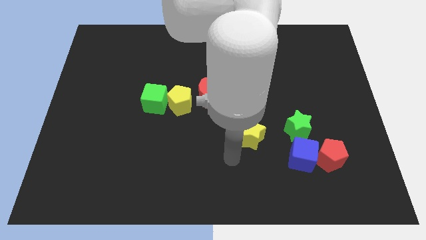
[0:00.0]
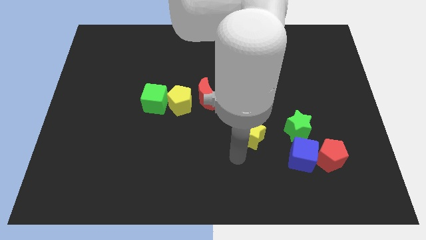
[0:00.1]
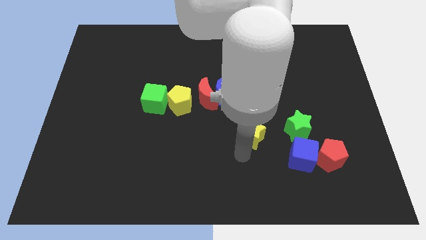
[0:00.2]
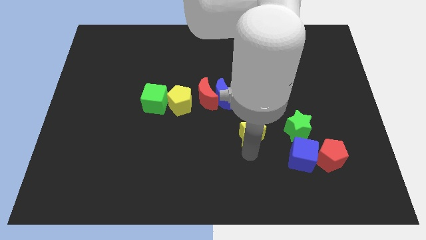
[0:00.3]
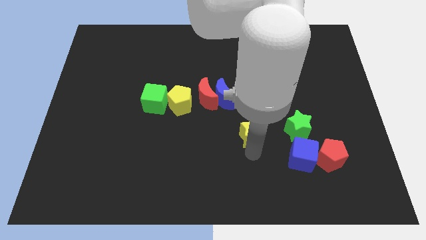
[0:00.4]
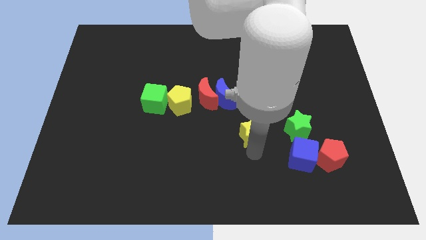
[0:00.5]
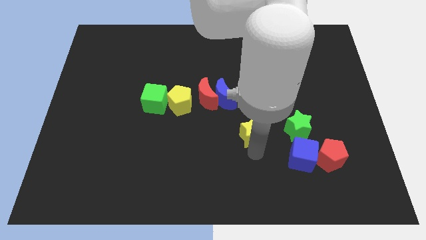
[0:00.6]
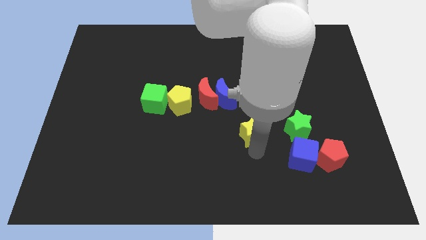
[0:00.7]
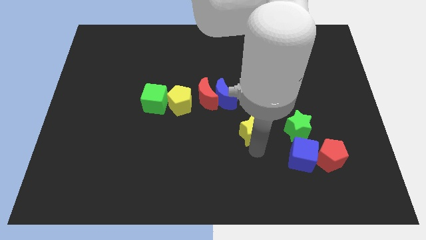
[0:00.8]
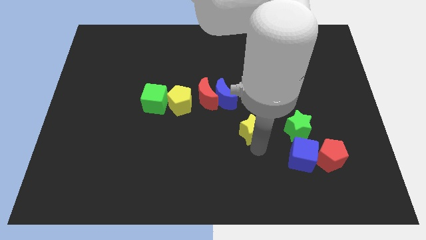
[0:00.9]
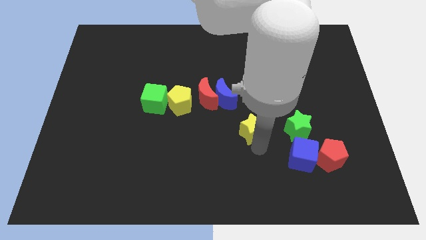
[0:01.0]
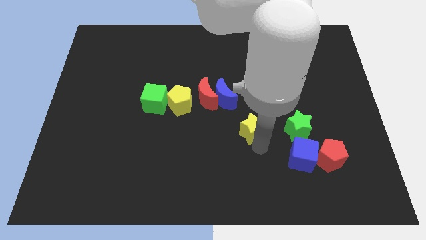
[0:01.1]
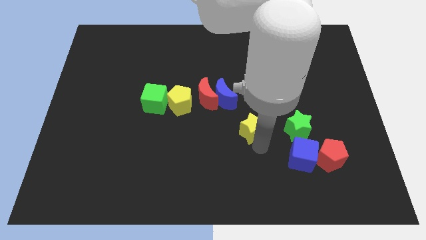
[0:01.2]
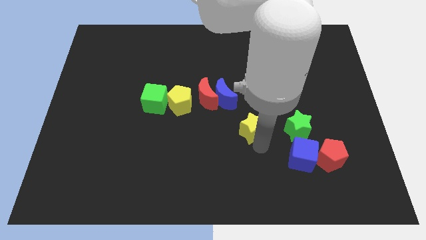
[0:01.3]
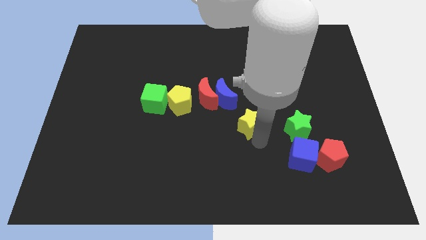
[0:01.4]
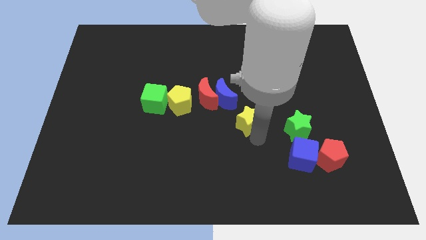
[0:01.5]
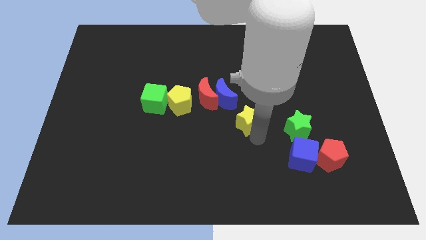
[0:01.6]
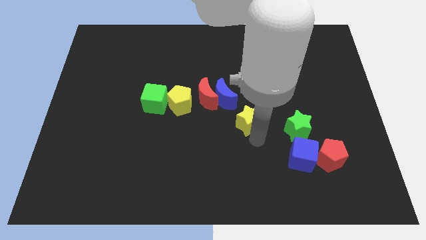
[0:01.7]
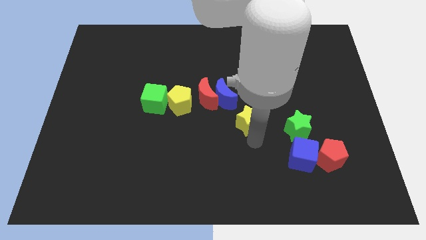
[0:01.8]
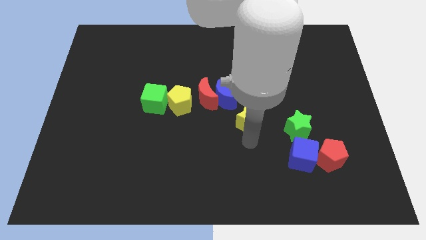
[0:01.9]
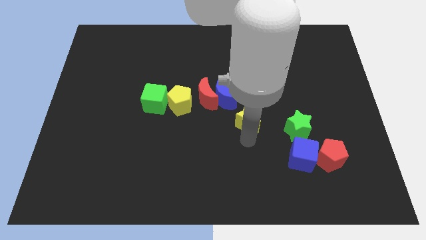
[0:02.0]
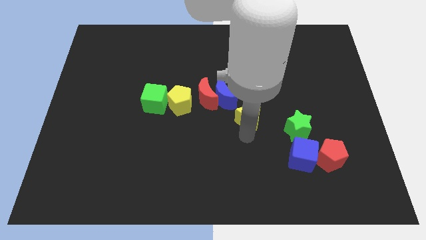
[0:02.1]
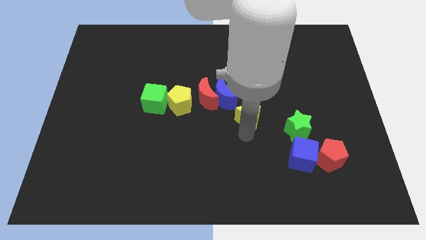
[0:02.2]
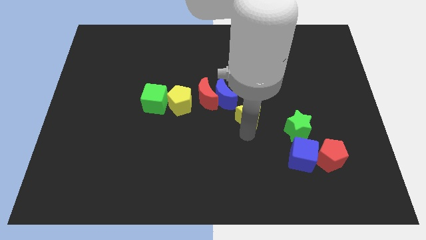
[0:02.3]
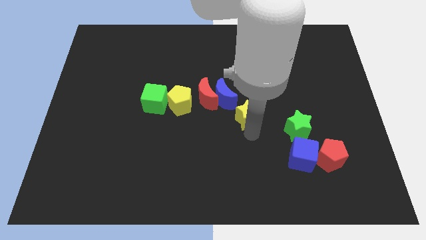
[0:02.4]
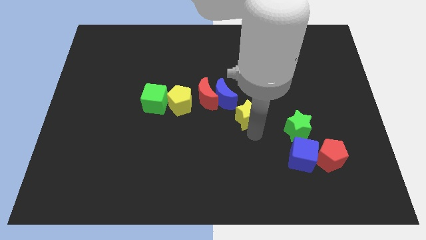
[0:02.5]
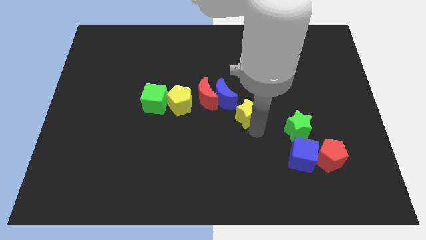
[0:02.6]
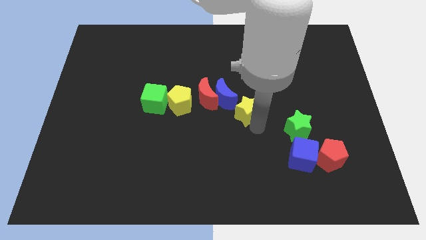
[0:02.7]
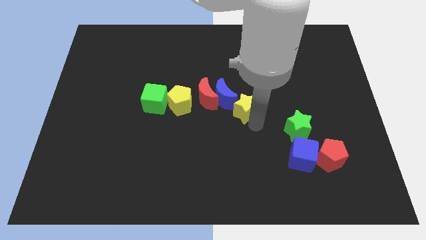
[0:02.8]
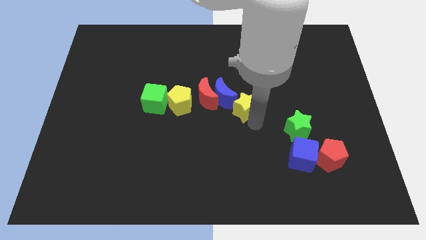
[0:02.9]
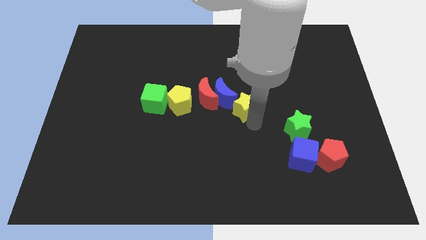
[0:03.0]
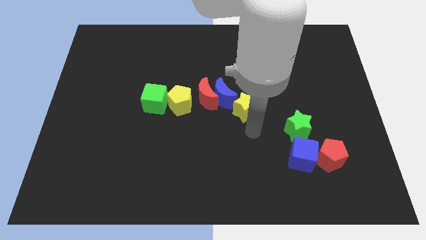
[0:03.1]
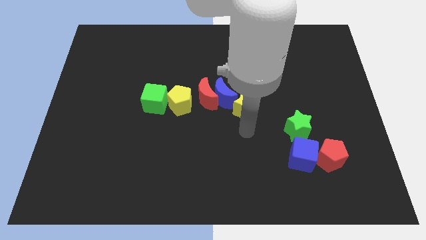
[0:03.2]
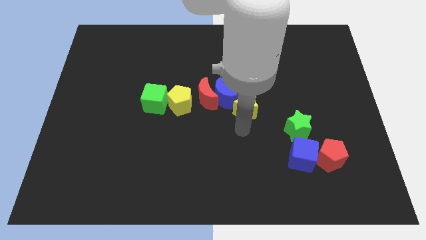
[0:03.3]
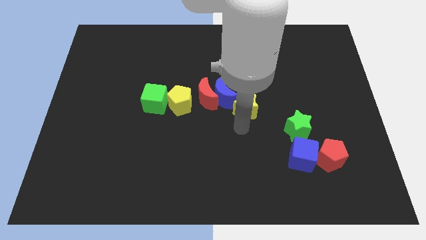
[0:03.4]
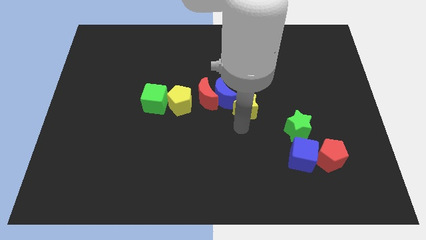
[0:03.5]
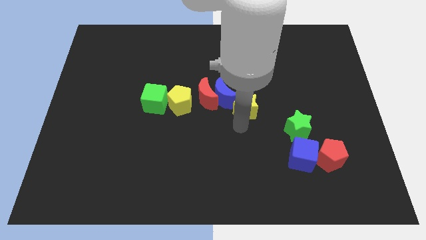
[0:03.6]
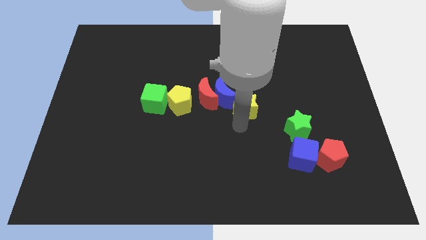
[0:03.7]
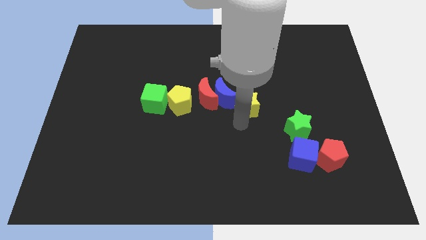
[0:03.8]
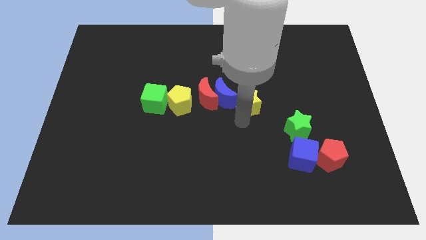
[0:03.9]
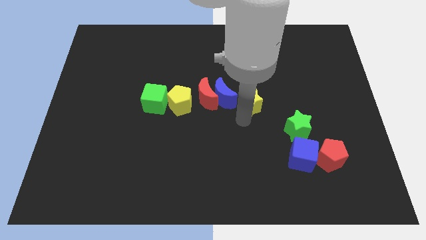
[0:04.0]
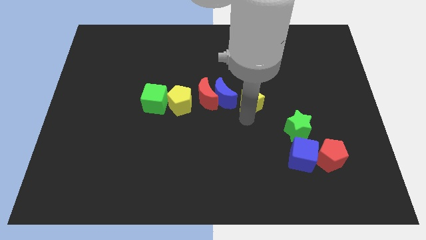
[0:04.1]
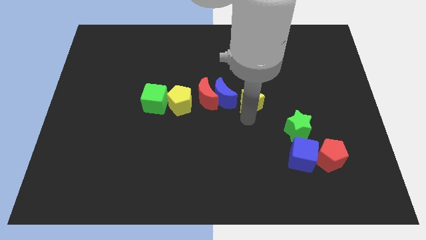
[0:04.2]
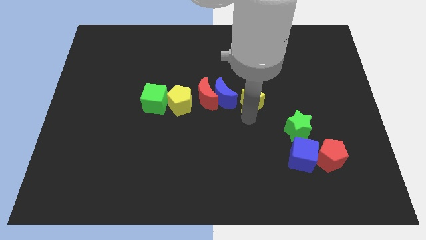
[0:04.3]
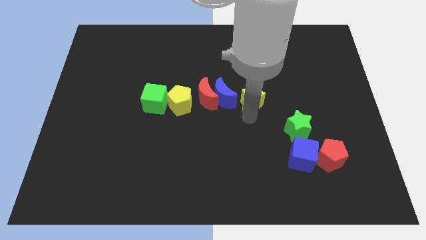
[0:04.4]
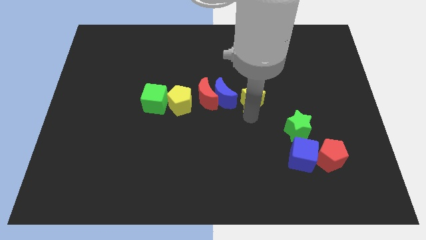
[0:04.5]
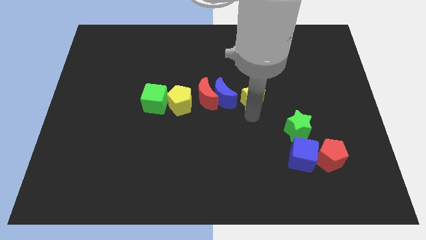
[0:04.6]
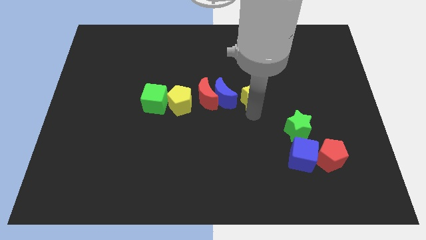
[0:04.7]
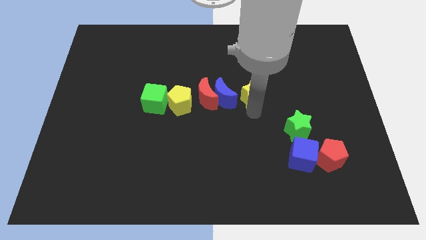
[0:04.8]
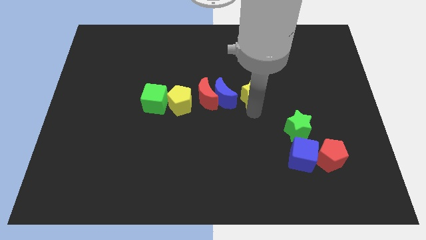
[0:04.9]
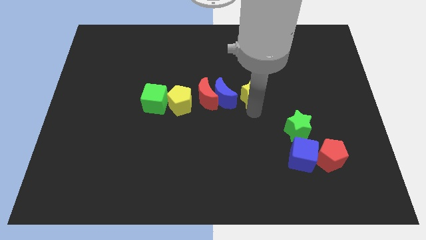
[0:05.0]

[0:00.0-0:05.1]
place yellow star to the right of blue moon

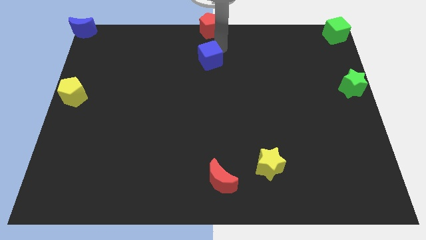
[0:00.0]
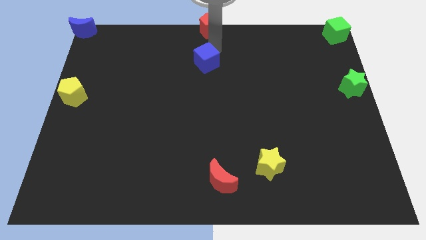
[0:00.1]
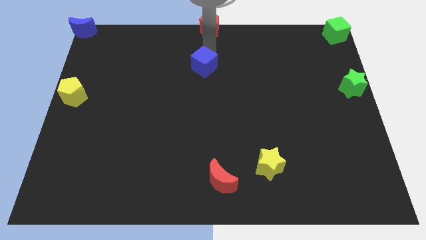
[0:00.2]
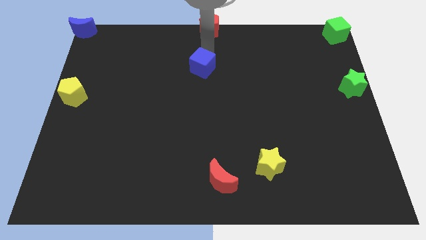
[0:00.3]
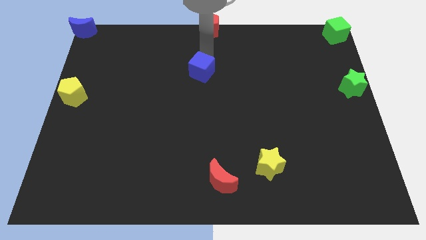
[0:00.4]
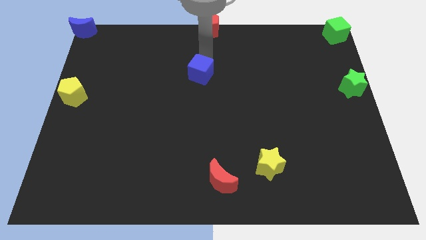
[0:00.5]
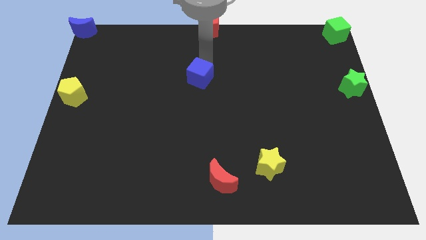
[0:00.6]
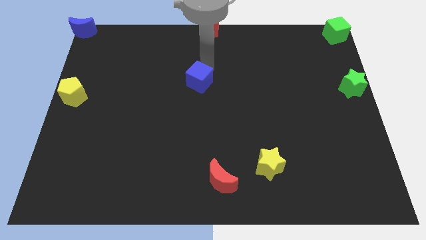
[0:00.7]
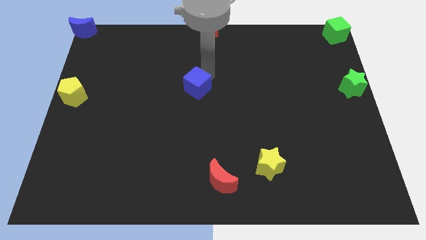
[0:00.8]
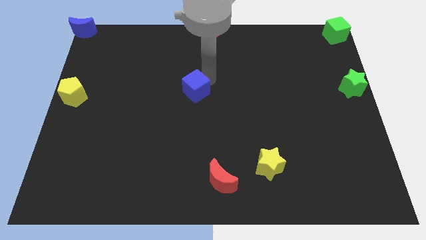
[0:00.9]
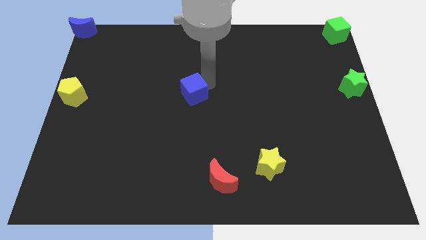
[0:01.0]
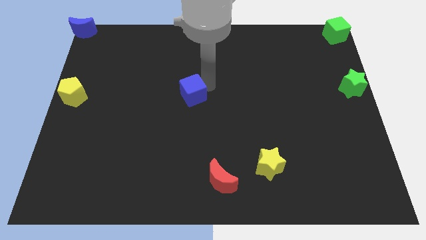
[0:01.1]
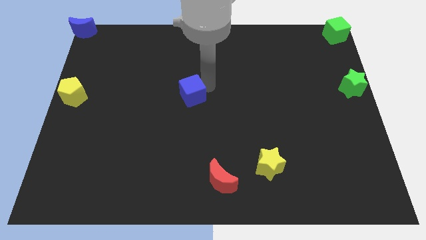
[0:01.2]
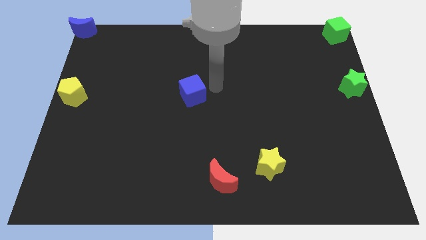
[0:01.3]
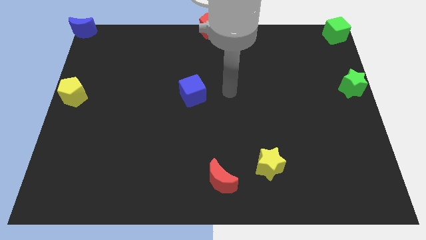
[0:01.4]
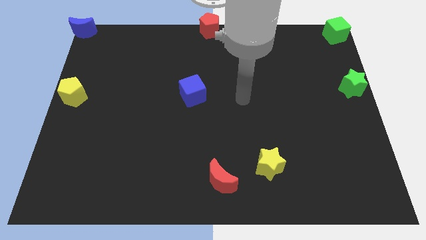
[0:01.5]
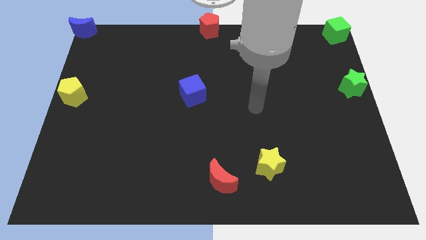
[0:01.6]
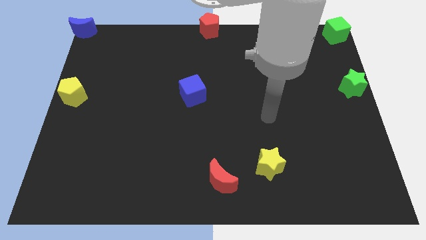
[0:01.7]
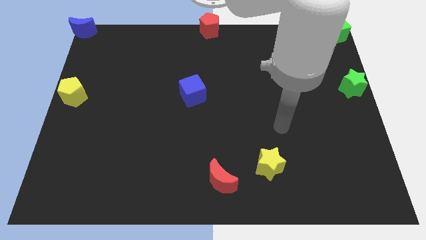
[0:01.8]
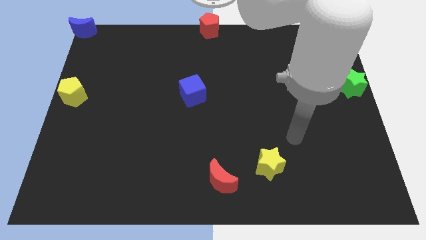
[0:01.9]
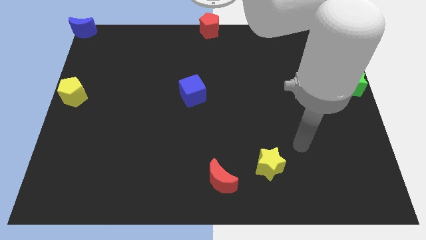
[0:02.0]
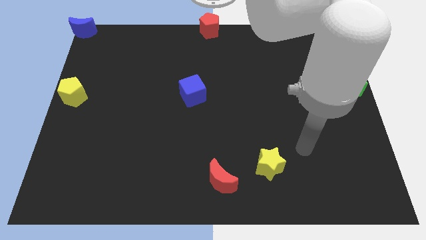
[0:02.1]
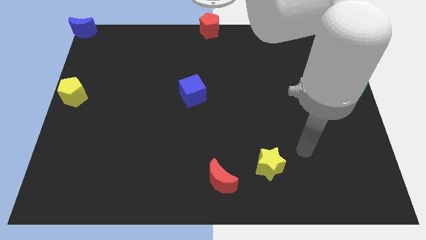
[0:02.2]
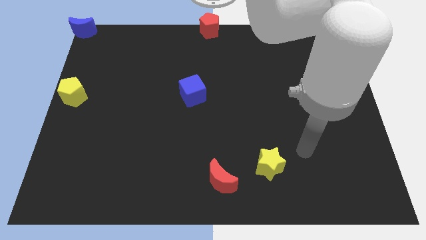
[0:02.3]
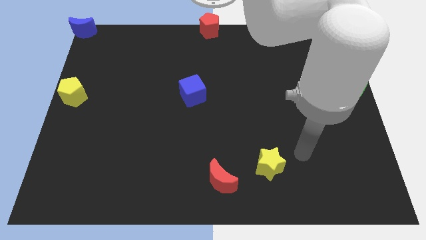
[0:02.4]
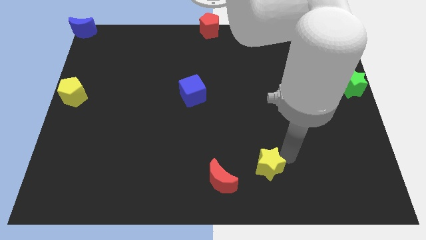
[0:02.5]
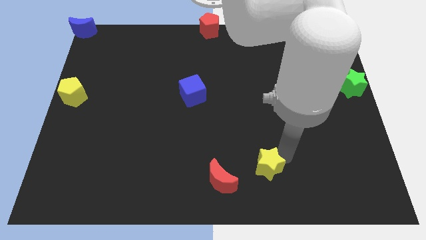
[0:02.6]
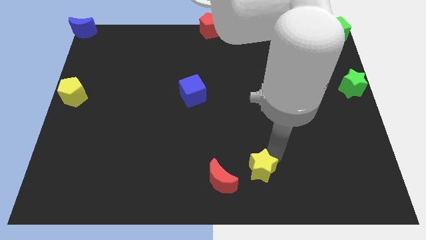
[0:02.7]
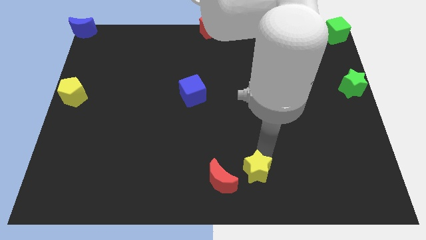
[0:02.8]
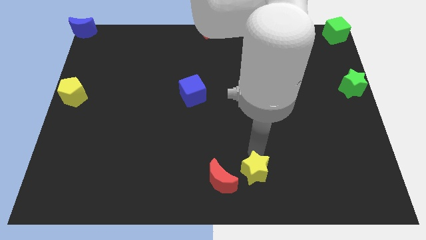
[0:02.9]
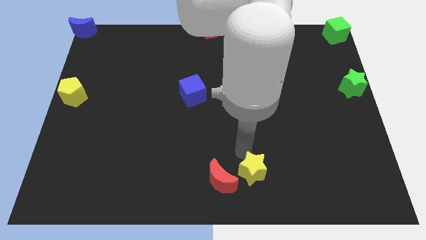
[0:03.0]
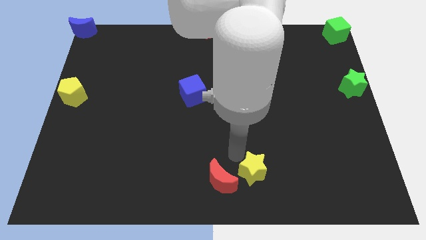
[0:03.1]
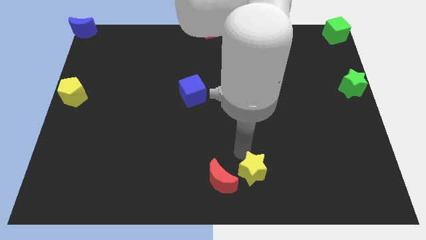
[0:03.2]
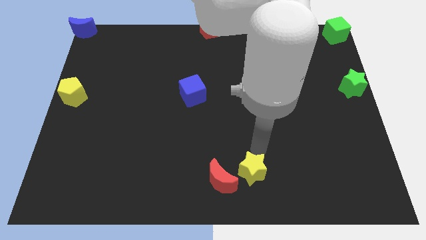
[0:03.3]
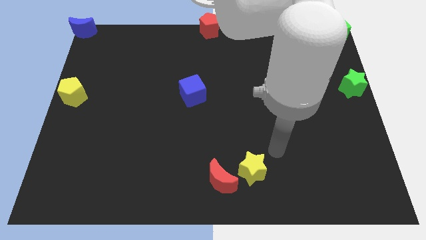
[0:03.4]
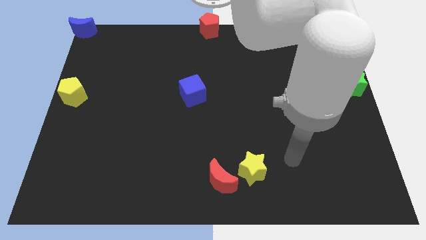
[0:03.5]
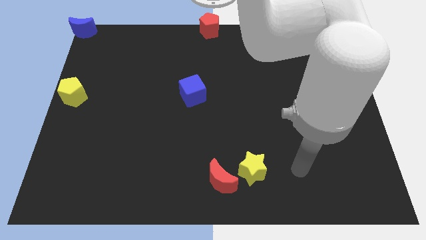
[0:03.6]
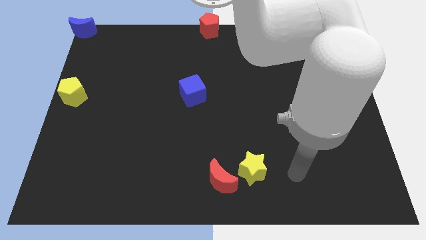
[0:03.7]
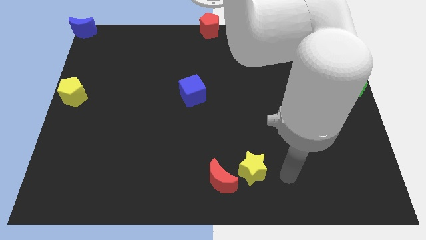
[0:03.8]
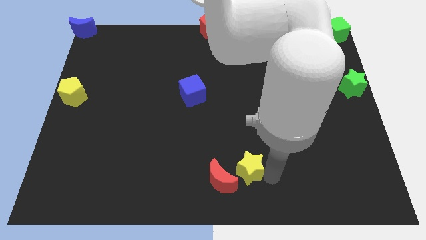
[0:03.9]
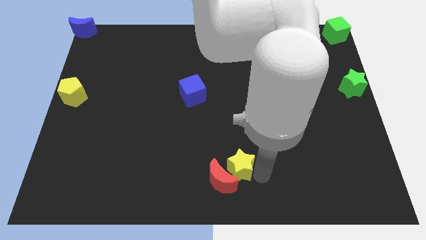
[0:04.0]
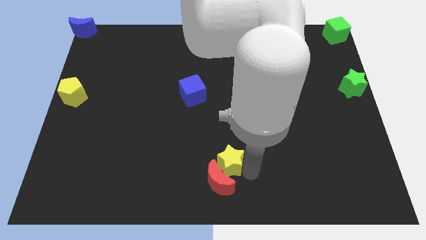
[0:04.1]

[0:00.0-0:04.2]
place the blue cube diagonally to yellow star
